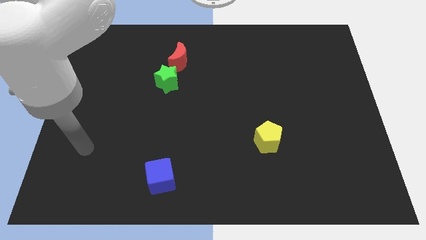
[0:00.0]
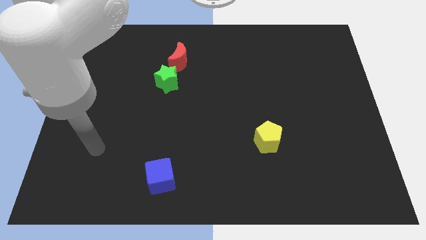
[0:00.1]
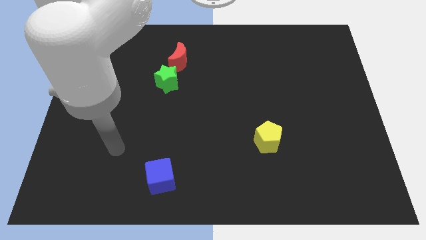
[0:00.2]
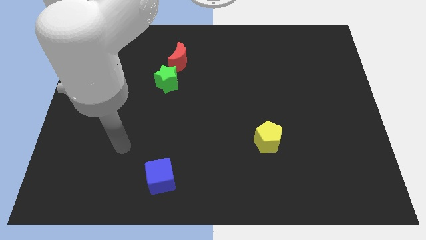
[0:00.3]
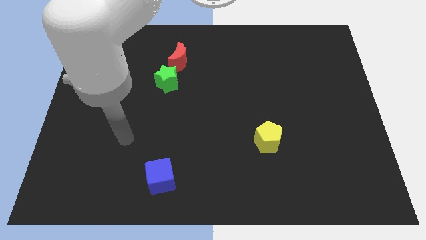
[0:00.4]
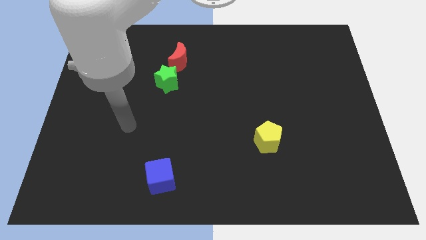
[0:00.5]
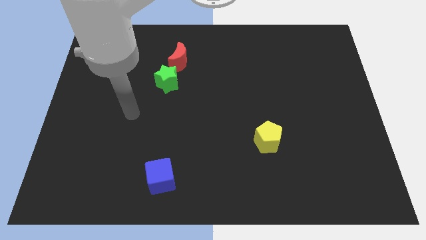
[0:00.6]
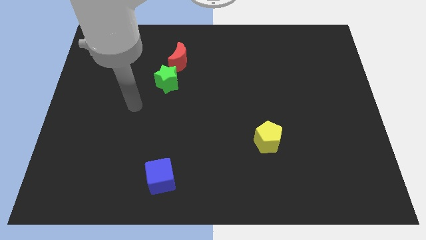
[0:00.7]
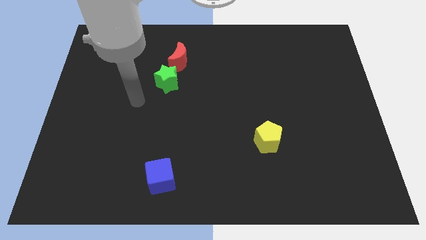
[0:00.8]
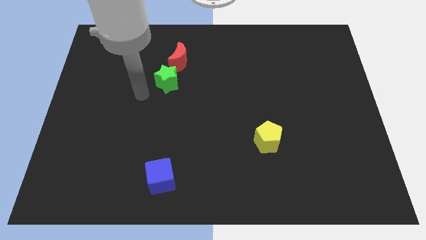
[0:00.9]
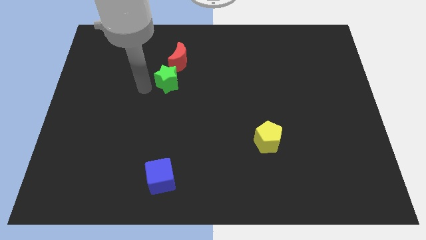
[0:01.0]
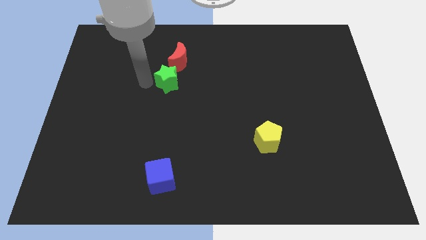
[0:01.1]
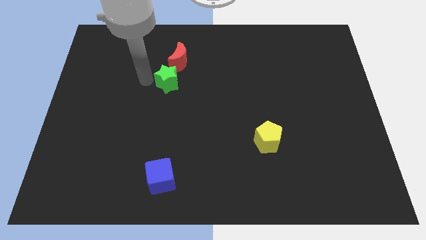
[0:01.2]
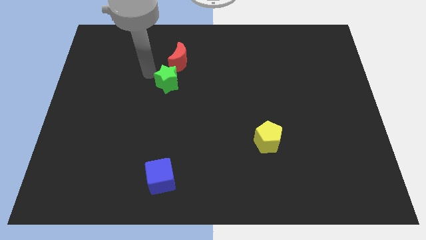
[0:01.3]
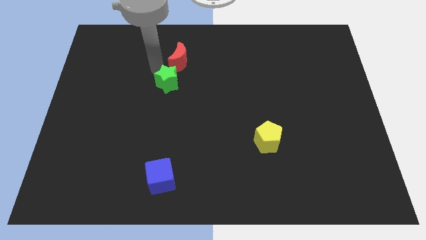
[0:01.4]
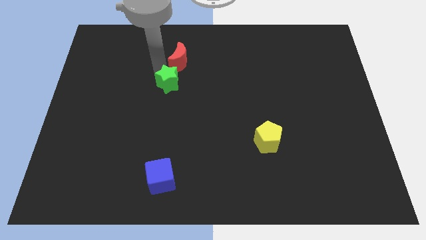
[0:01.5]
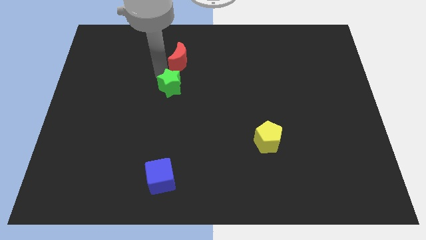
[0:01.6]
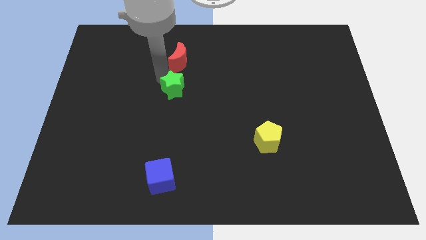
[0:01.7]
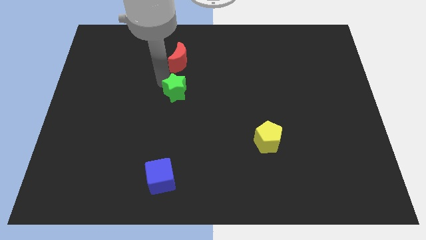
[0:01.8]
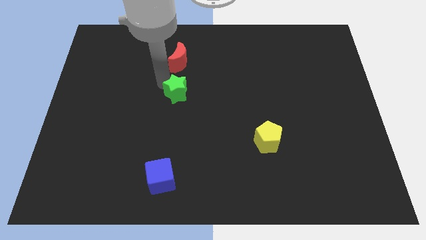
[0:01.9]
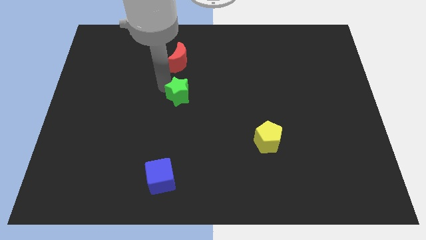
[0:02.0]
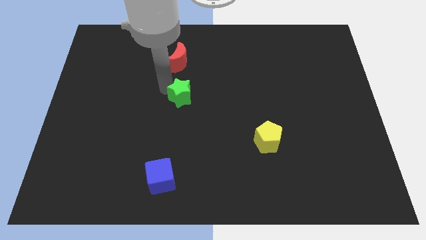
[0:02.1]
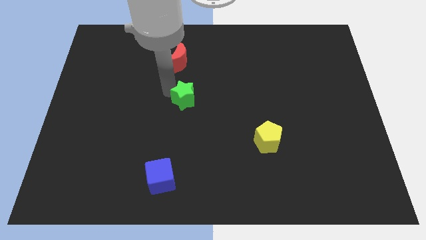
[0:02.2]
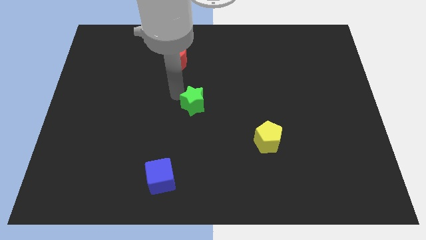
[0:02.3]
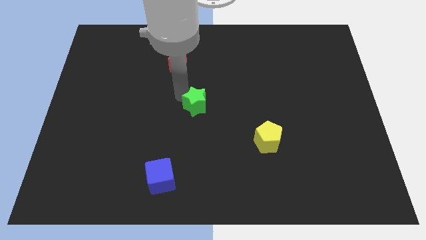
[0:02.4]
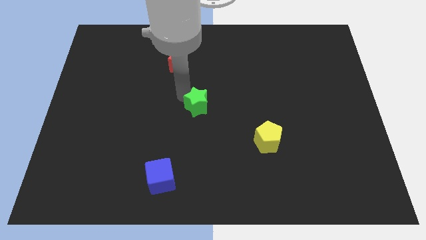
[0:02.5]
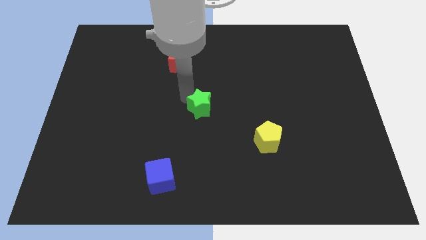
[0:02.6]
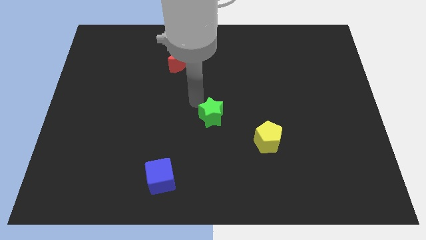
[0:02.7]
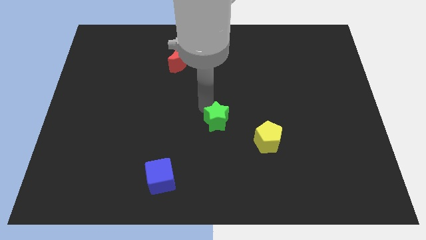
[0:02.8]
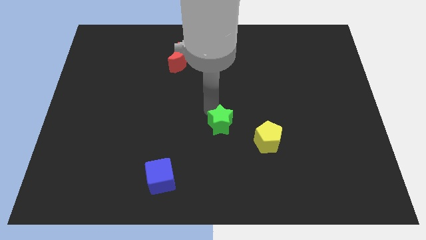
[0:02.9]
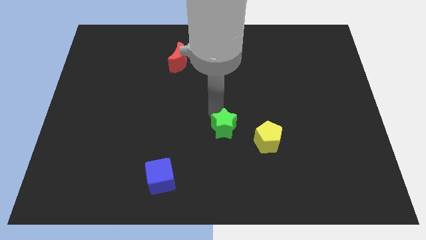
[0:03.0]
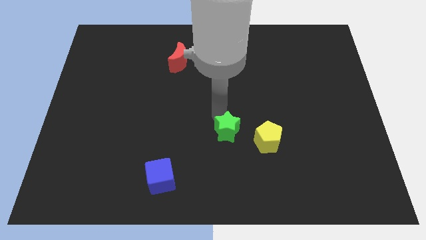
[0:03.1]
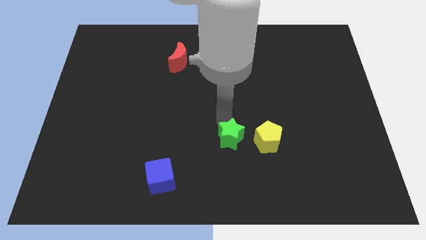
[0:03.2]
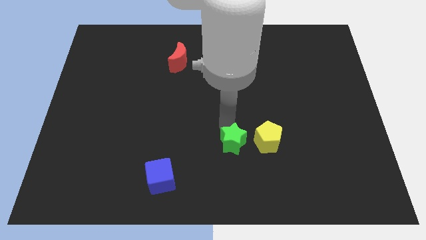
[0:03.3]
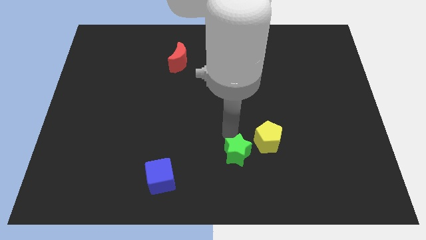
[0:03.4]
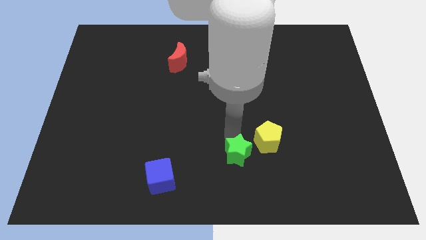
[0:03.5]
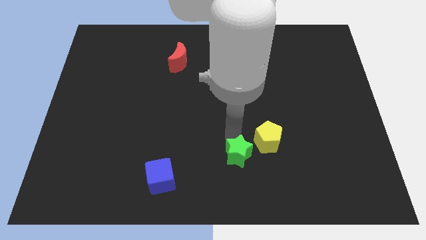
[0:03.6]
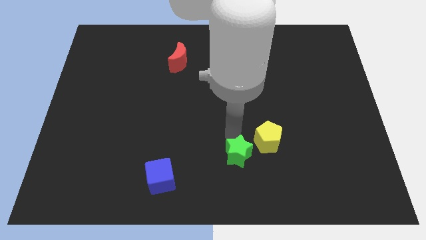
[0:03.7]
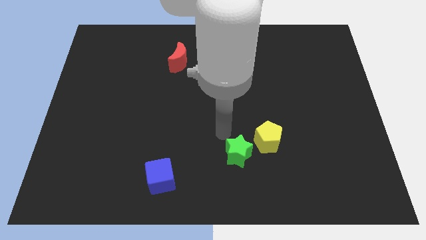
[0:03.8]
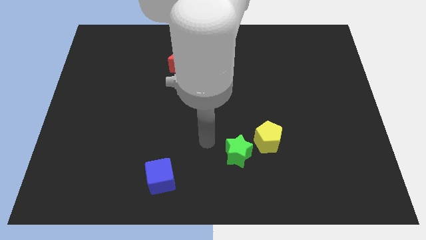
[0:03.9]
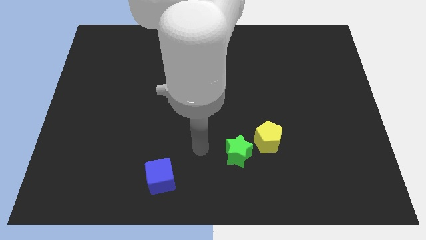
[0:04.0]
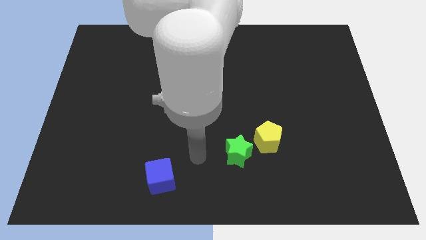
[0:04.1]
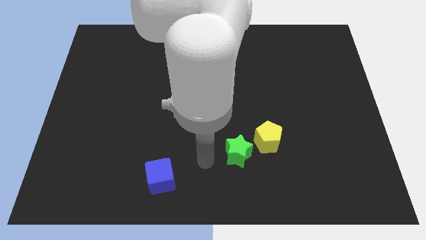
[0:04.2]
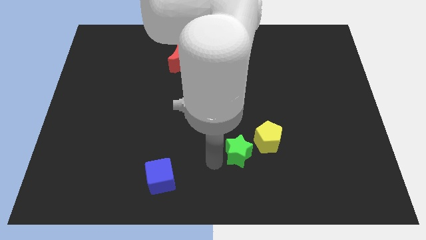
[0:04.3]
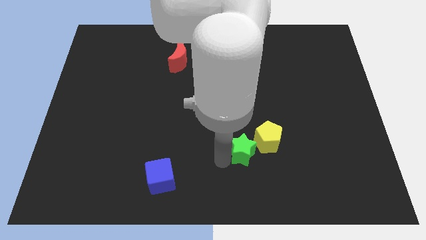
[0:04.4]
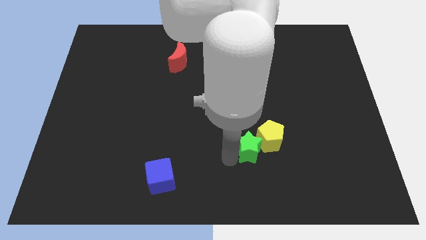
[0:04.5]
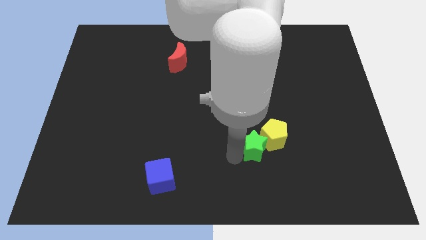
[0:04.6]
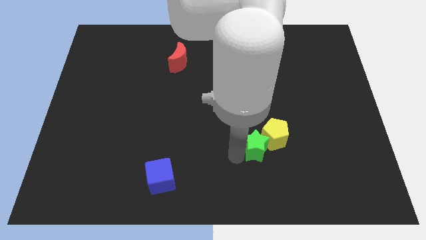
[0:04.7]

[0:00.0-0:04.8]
push the green star next to the yellow block

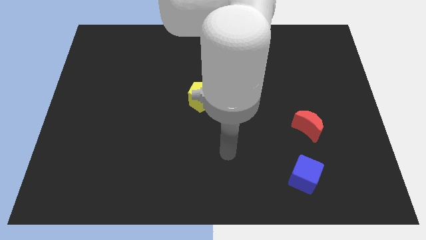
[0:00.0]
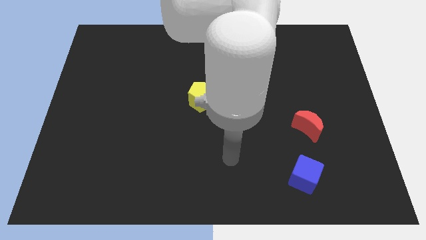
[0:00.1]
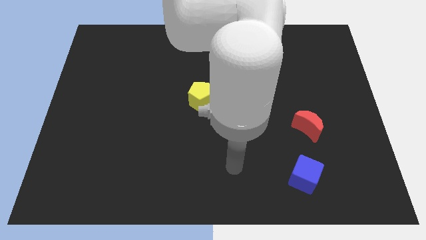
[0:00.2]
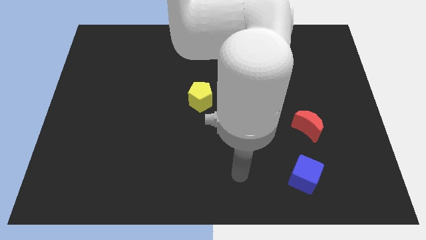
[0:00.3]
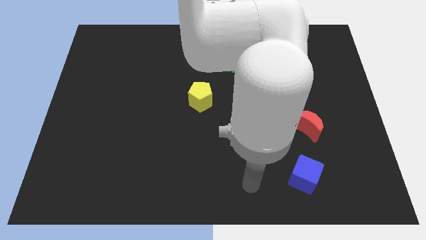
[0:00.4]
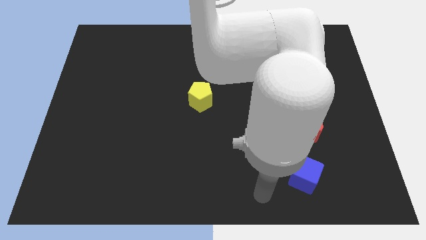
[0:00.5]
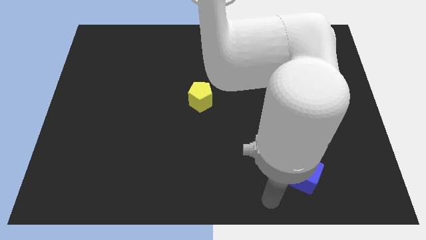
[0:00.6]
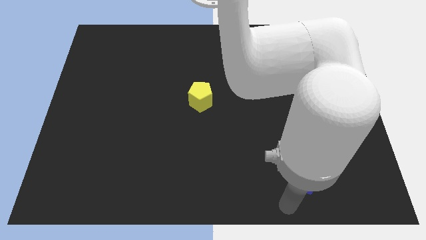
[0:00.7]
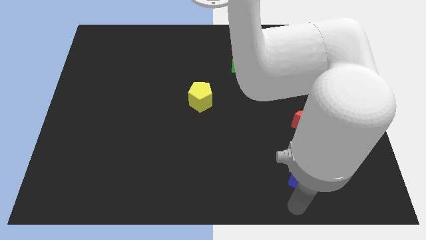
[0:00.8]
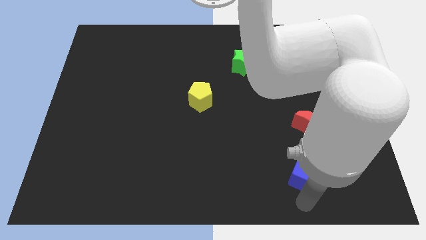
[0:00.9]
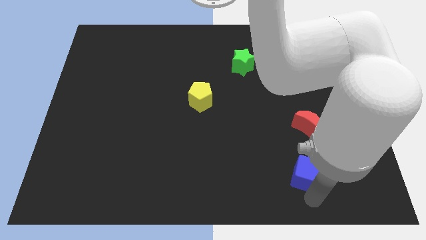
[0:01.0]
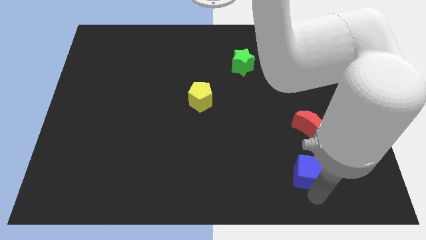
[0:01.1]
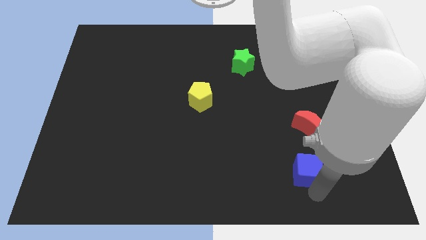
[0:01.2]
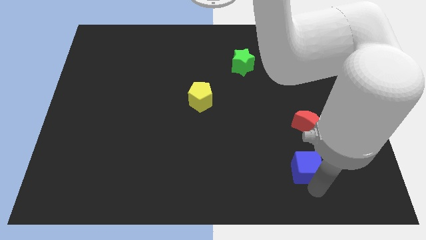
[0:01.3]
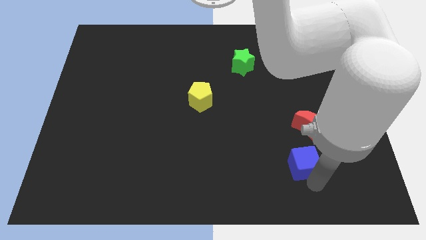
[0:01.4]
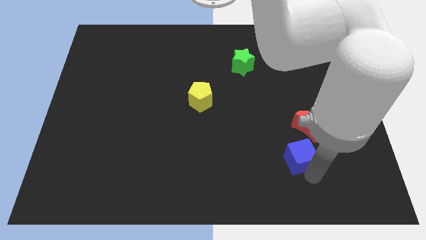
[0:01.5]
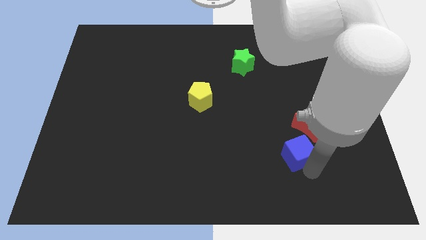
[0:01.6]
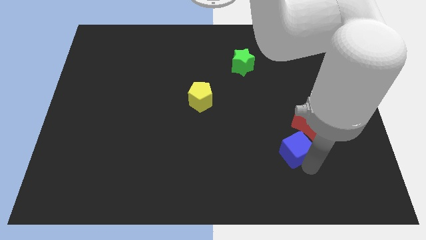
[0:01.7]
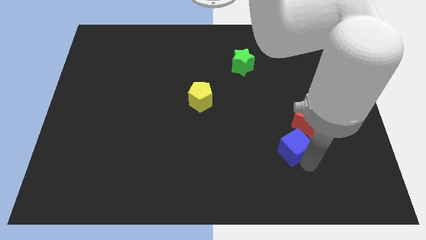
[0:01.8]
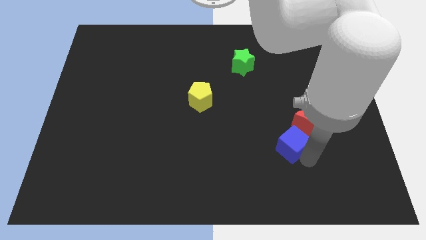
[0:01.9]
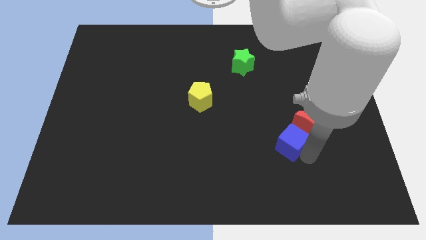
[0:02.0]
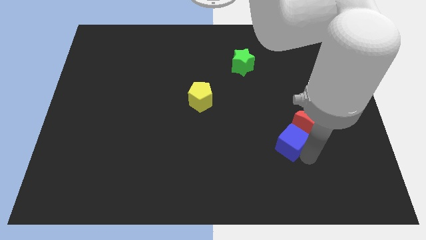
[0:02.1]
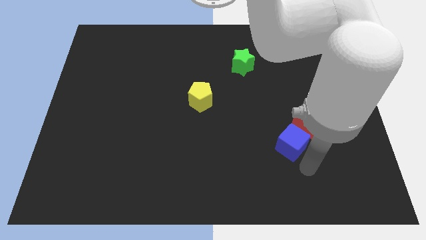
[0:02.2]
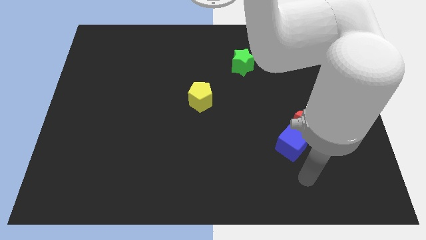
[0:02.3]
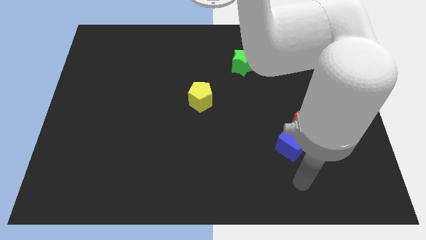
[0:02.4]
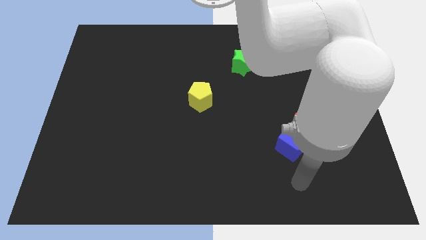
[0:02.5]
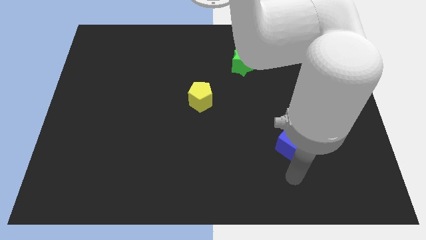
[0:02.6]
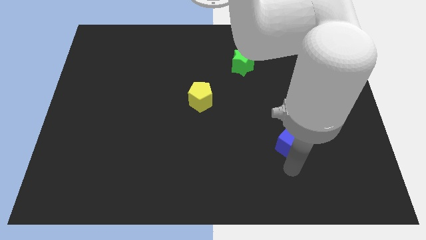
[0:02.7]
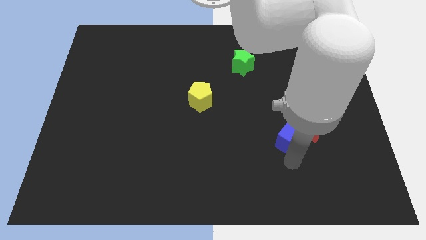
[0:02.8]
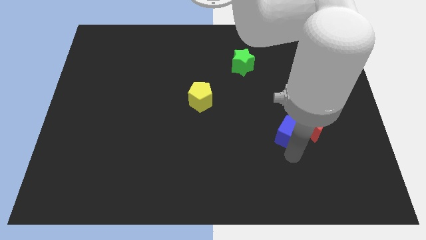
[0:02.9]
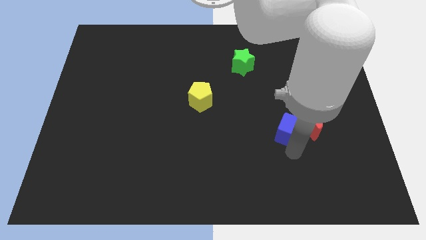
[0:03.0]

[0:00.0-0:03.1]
push the cube close to the red moon

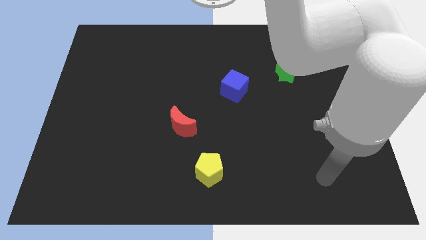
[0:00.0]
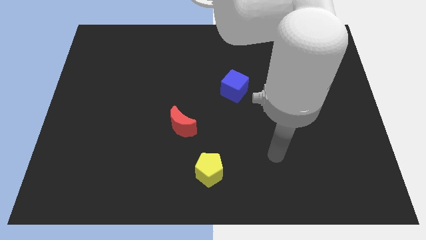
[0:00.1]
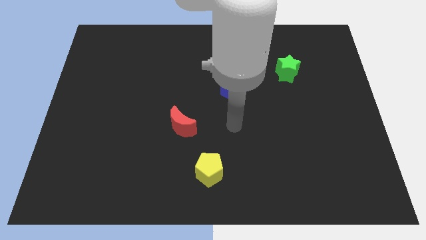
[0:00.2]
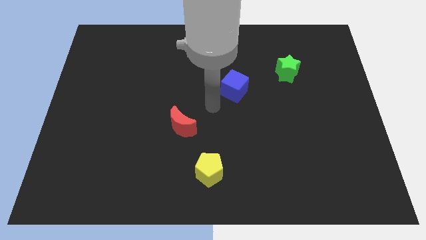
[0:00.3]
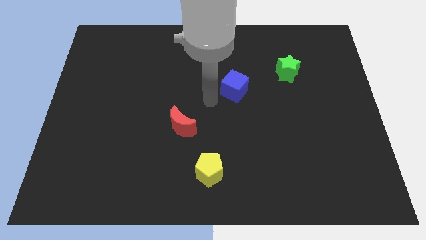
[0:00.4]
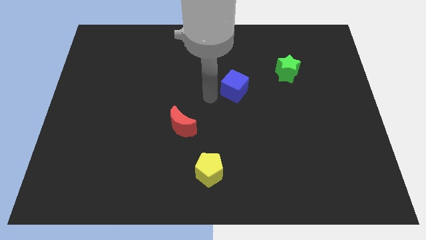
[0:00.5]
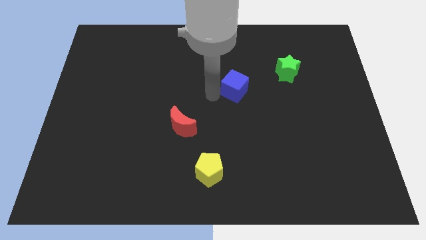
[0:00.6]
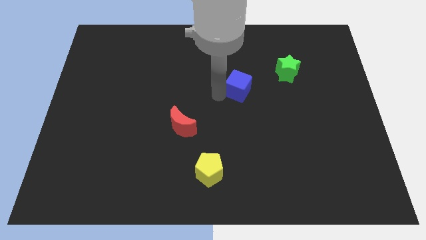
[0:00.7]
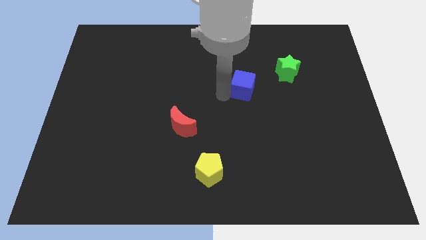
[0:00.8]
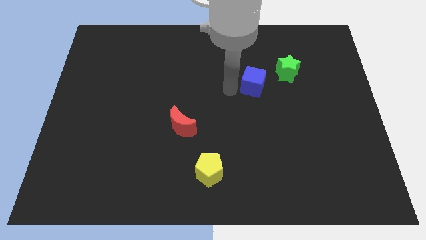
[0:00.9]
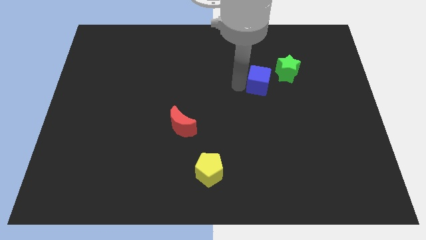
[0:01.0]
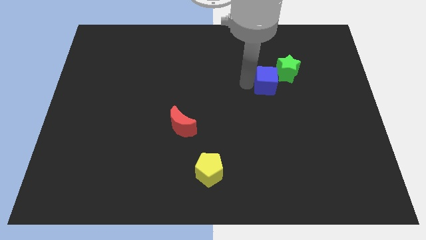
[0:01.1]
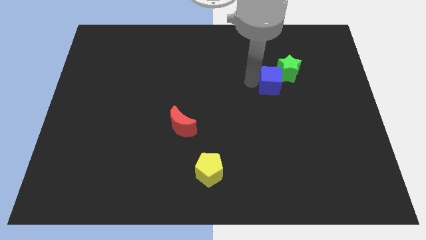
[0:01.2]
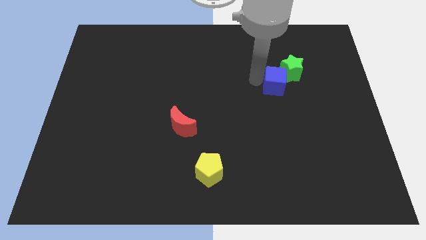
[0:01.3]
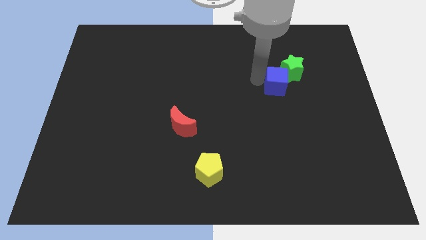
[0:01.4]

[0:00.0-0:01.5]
put the blue block to the green star
